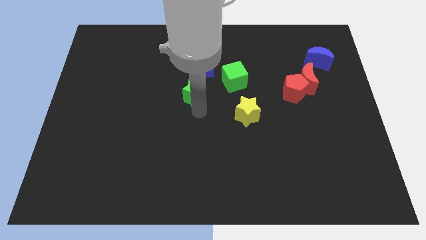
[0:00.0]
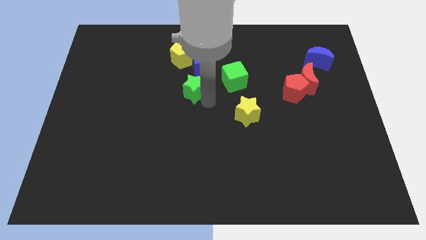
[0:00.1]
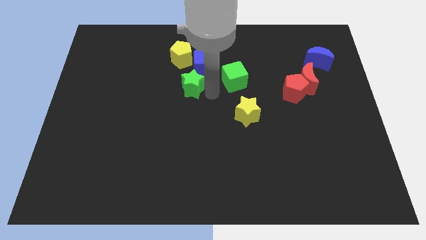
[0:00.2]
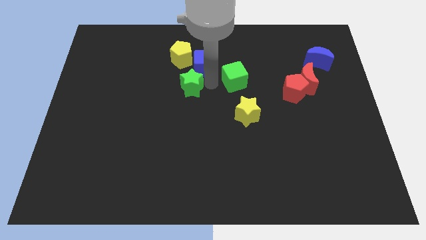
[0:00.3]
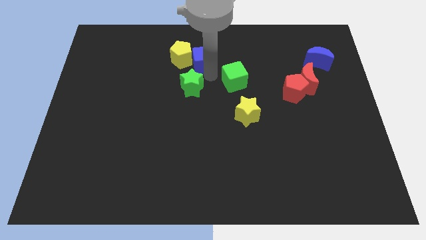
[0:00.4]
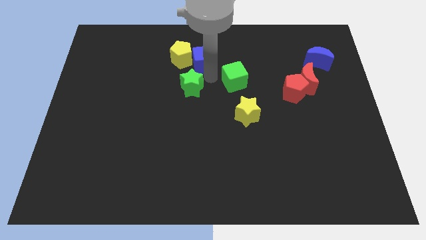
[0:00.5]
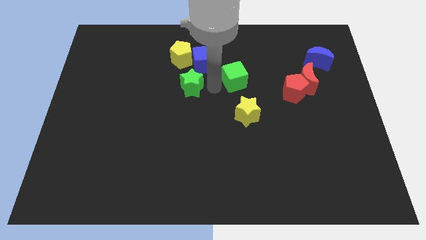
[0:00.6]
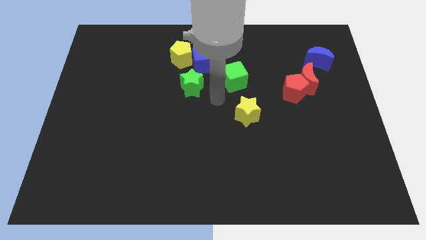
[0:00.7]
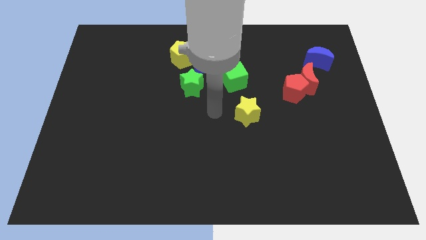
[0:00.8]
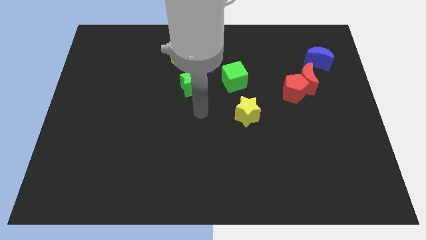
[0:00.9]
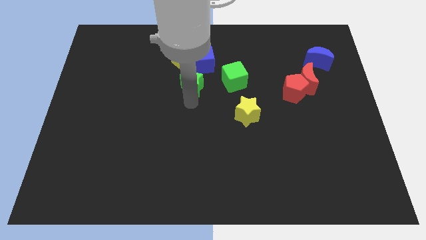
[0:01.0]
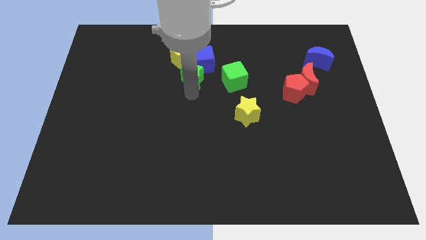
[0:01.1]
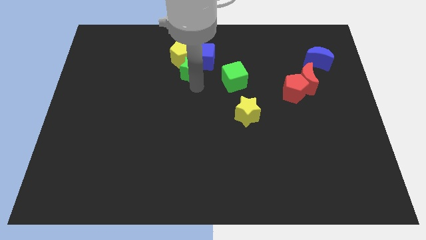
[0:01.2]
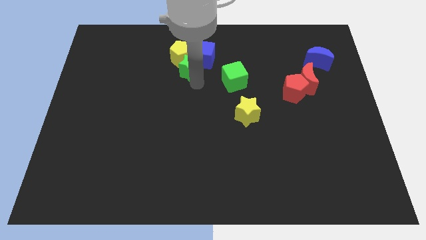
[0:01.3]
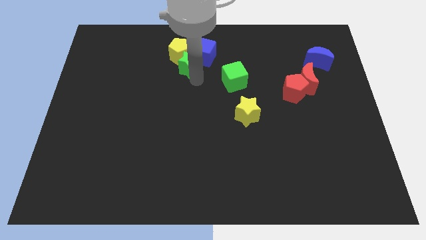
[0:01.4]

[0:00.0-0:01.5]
move the green star below the yellow pentagon and blue cube

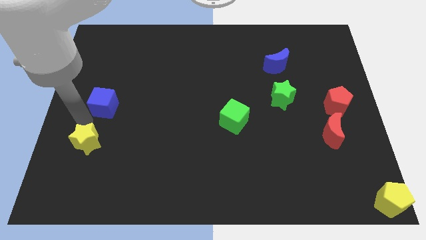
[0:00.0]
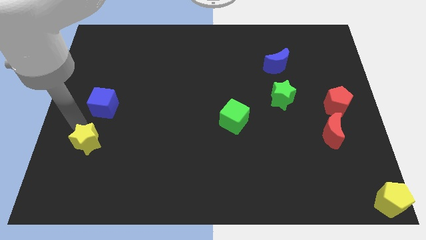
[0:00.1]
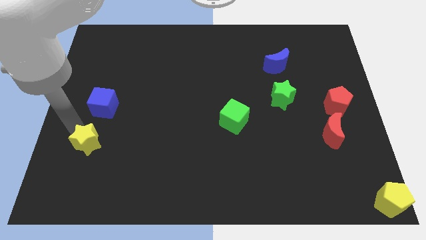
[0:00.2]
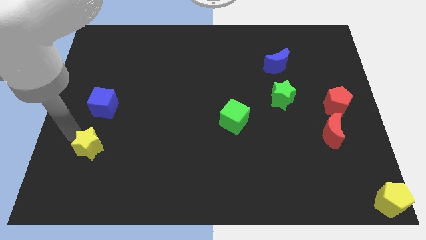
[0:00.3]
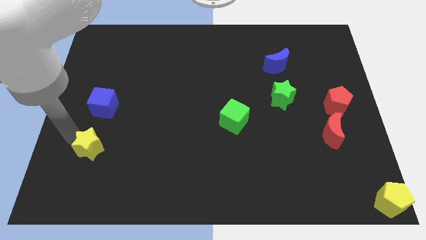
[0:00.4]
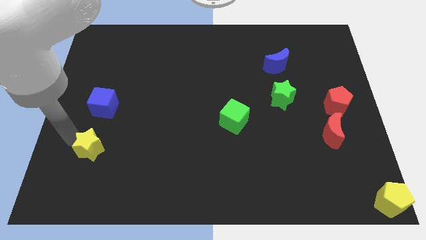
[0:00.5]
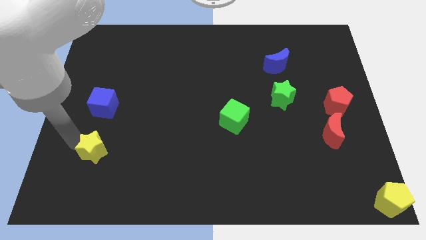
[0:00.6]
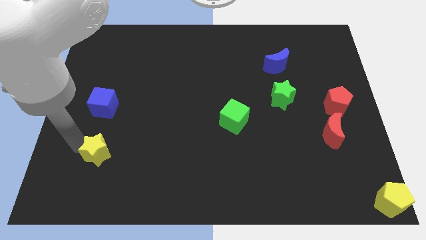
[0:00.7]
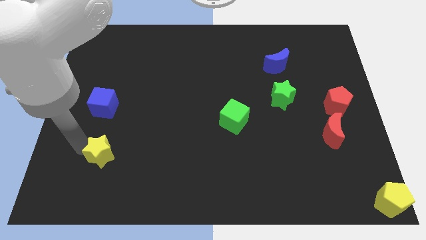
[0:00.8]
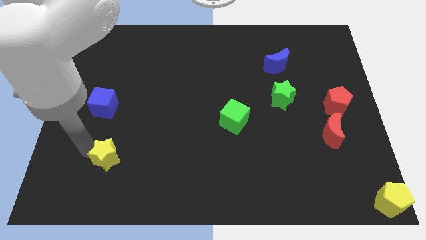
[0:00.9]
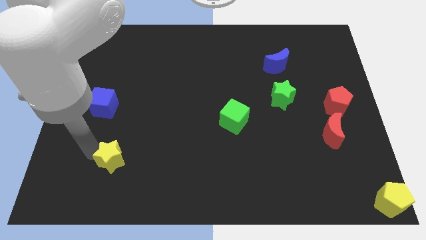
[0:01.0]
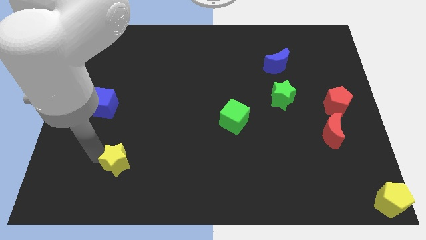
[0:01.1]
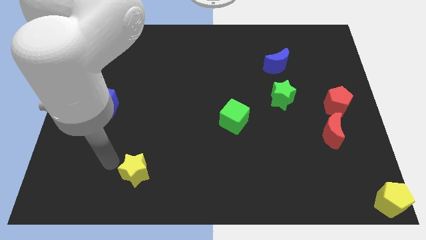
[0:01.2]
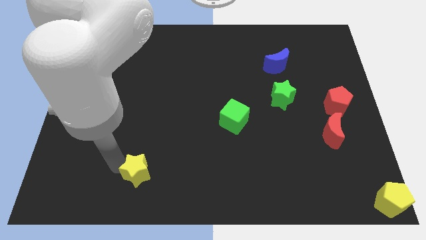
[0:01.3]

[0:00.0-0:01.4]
move the yellow star to the bottom right of the blue cube

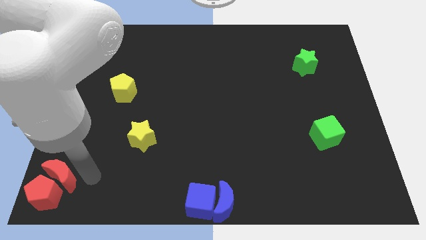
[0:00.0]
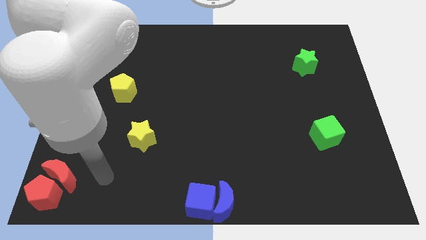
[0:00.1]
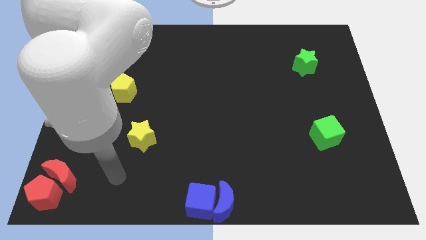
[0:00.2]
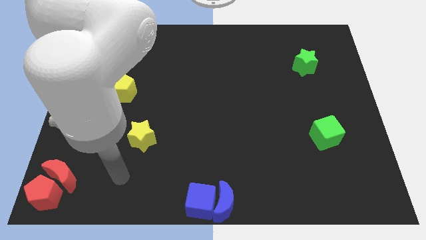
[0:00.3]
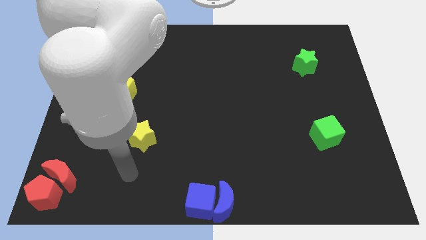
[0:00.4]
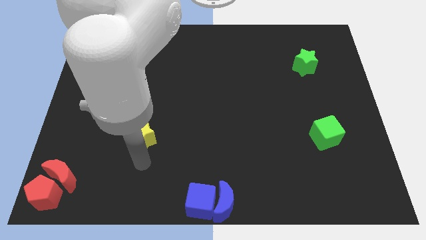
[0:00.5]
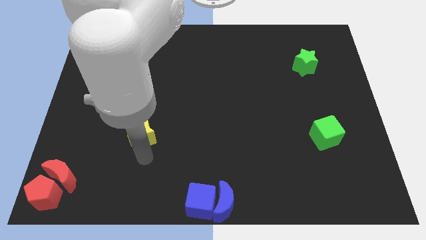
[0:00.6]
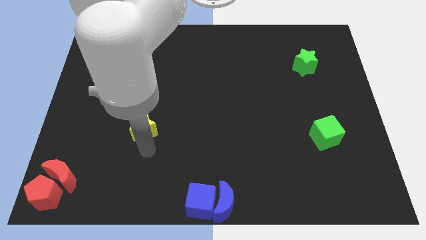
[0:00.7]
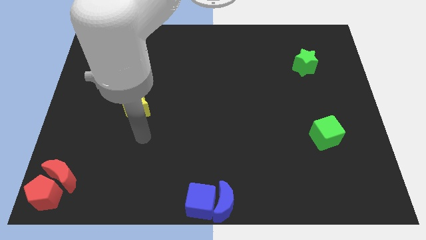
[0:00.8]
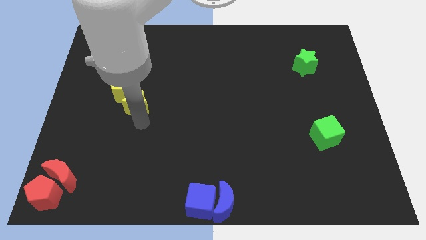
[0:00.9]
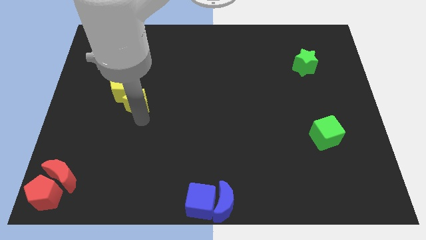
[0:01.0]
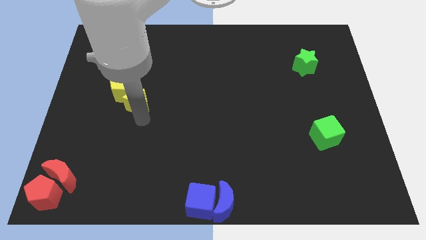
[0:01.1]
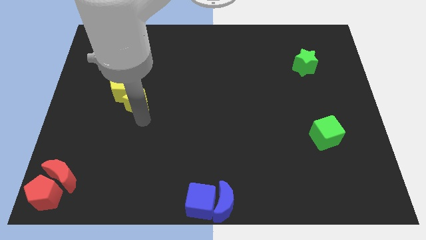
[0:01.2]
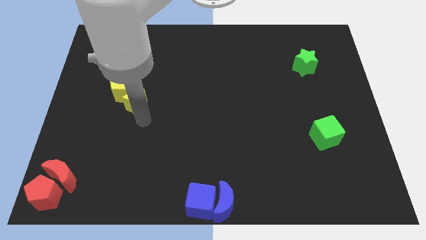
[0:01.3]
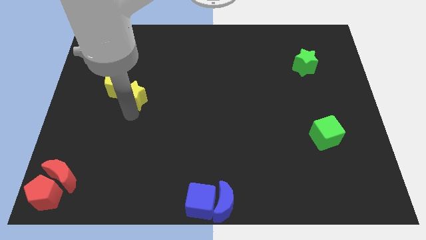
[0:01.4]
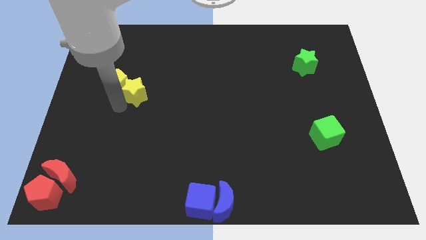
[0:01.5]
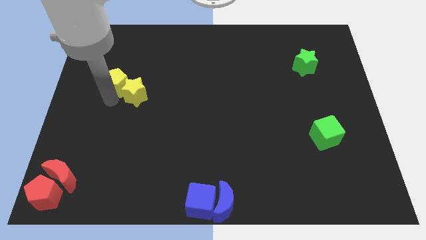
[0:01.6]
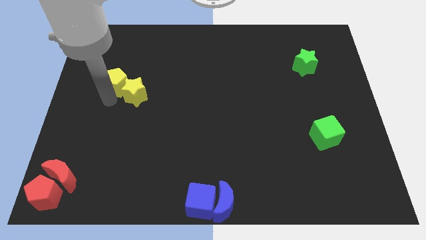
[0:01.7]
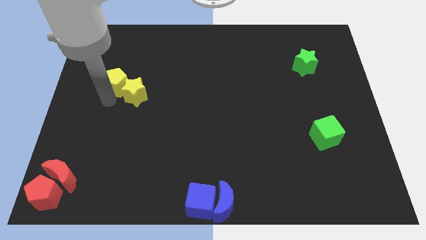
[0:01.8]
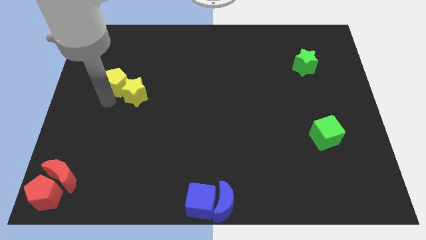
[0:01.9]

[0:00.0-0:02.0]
move the yellow star into the yellow pentagon

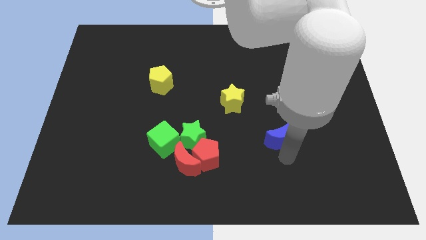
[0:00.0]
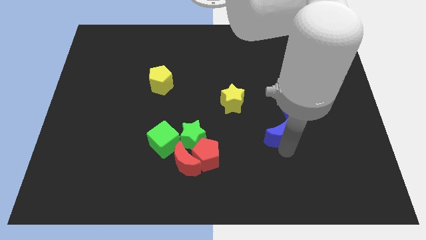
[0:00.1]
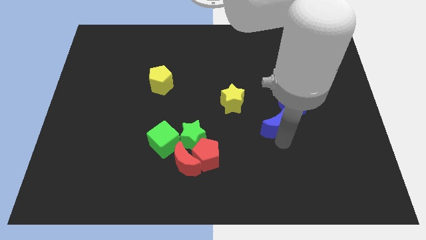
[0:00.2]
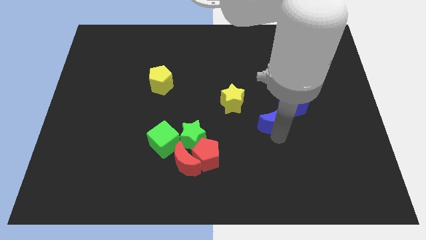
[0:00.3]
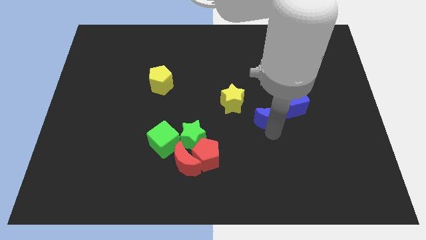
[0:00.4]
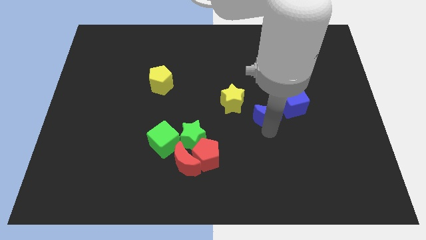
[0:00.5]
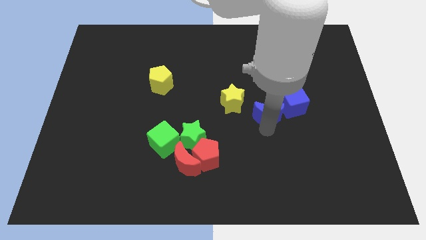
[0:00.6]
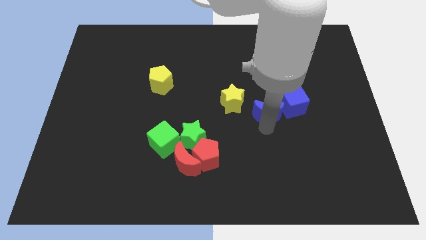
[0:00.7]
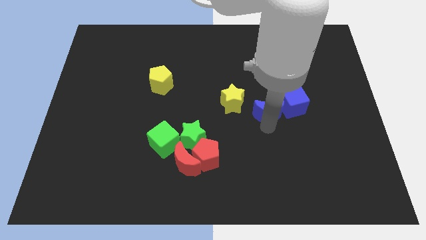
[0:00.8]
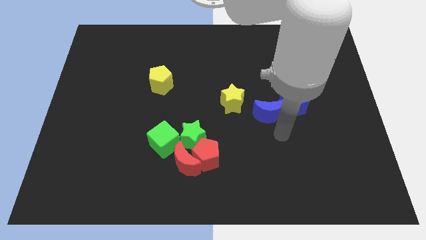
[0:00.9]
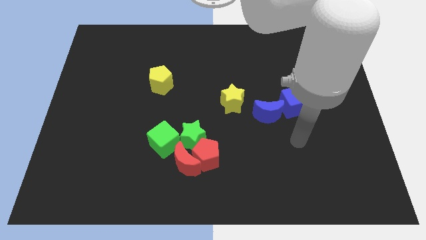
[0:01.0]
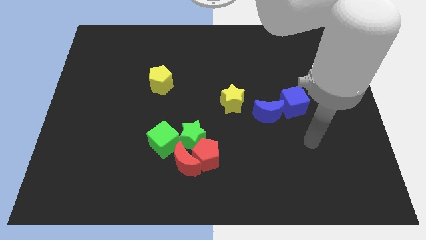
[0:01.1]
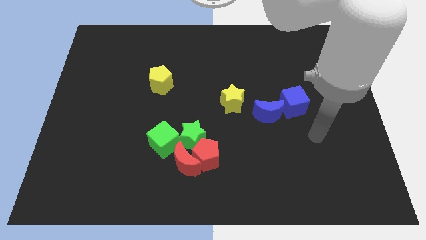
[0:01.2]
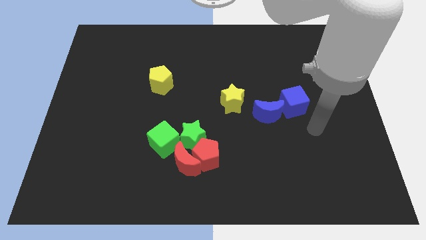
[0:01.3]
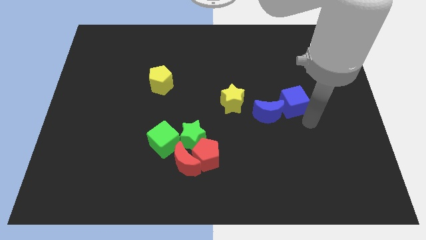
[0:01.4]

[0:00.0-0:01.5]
place the blue moon left to the blue cube

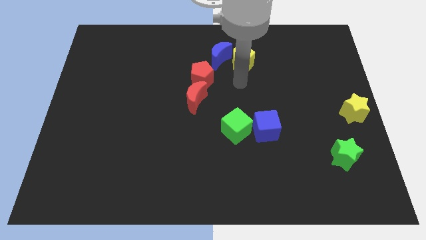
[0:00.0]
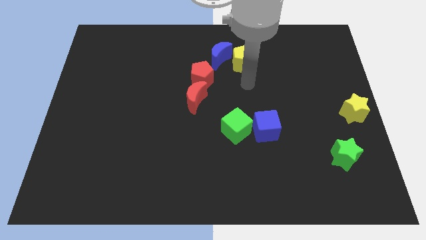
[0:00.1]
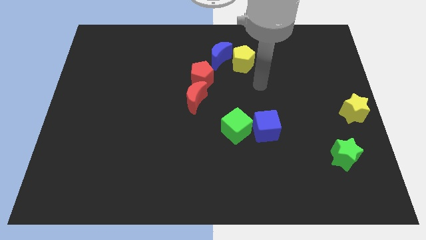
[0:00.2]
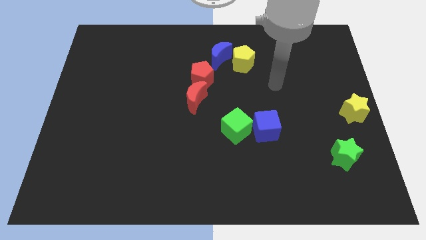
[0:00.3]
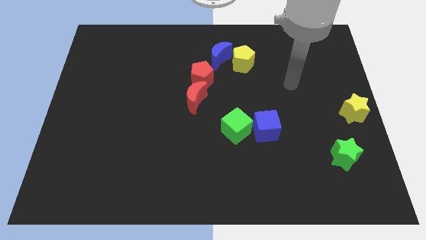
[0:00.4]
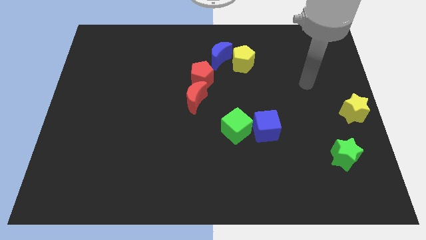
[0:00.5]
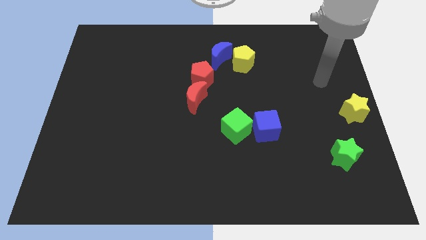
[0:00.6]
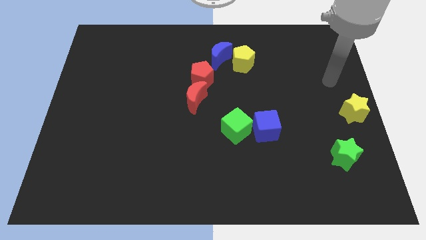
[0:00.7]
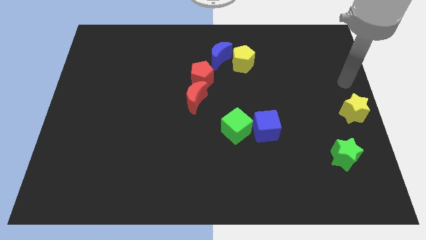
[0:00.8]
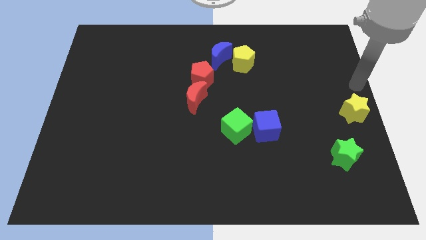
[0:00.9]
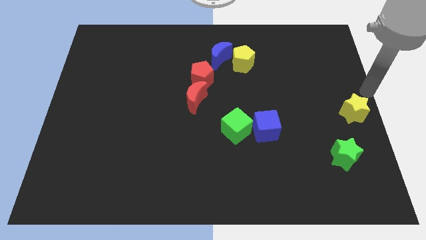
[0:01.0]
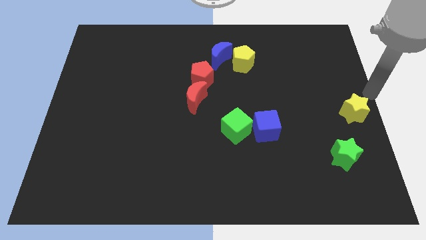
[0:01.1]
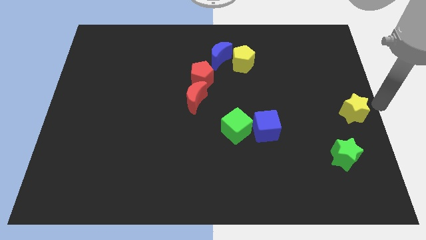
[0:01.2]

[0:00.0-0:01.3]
move your arm to the right side of the yellow star

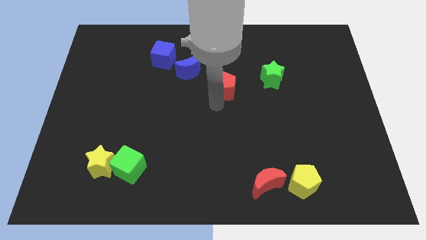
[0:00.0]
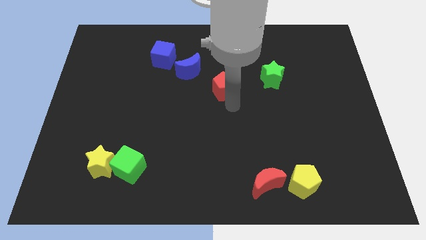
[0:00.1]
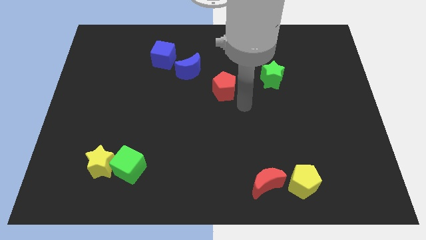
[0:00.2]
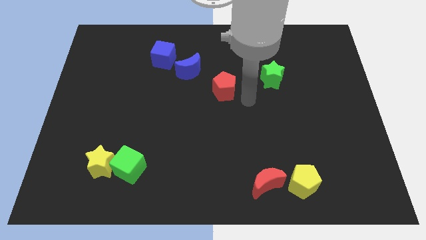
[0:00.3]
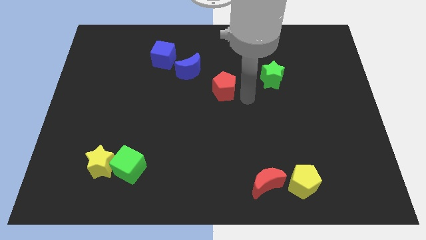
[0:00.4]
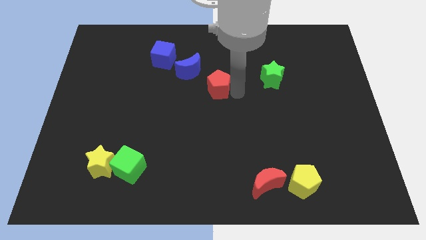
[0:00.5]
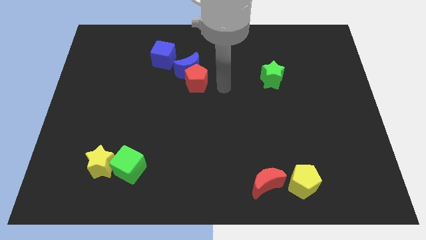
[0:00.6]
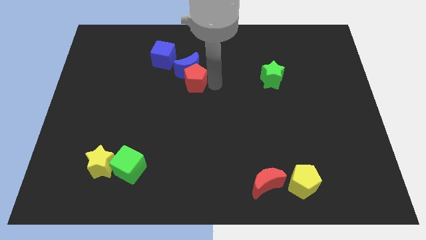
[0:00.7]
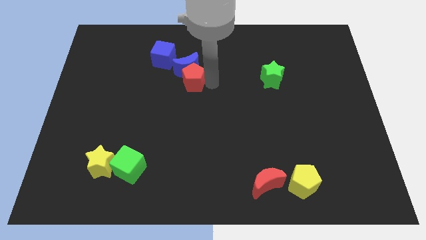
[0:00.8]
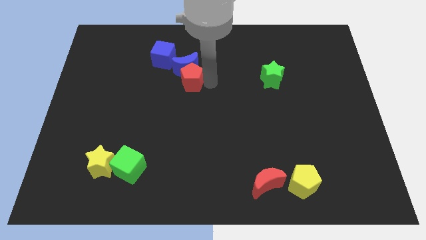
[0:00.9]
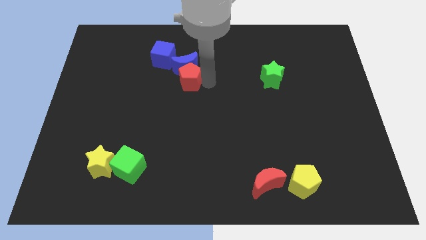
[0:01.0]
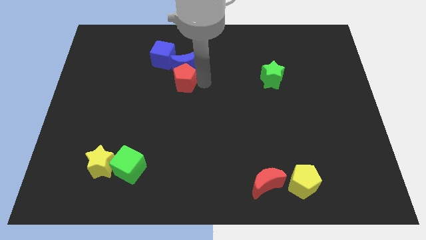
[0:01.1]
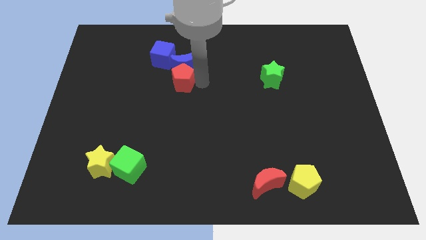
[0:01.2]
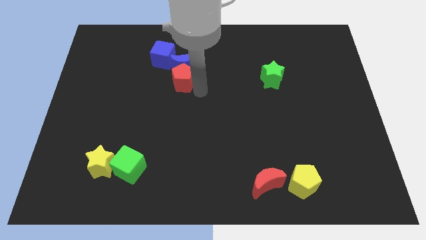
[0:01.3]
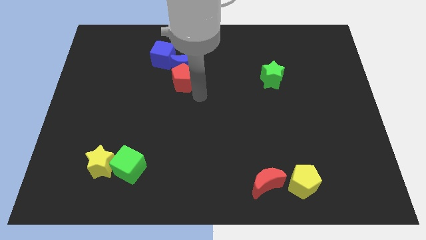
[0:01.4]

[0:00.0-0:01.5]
push the red pentagon into the blue moon
